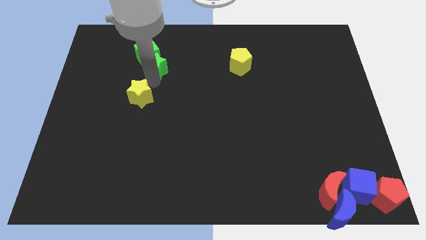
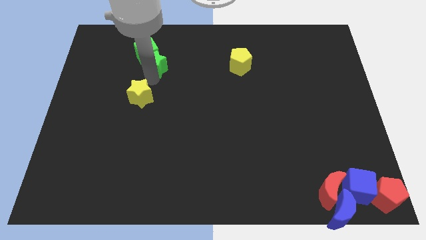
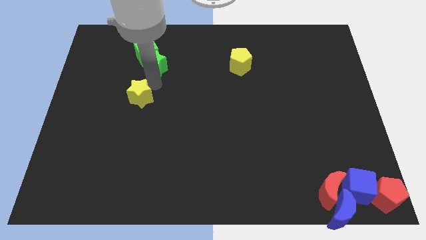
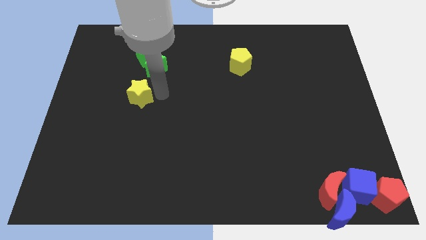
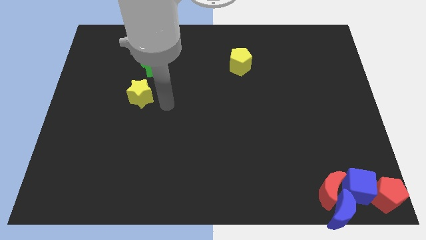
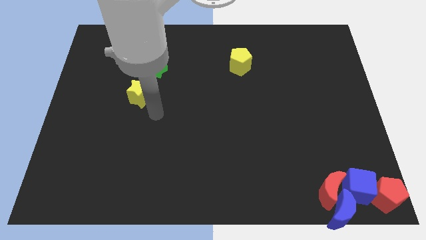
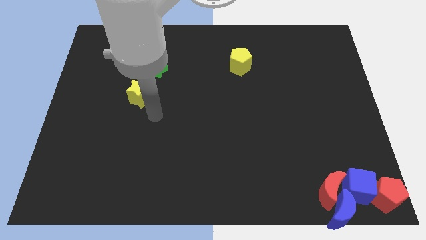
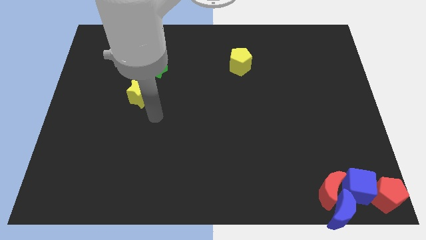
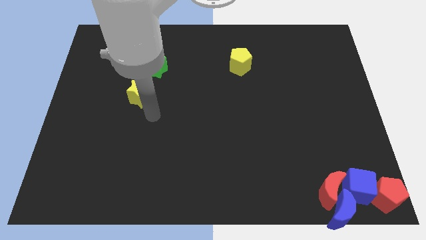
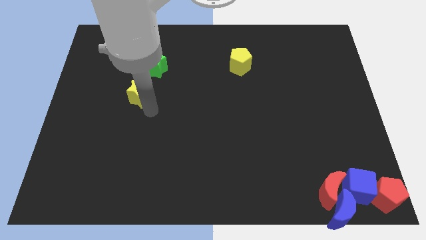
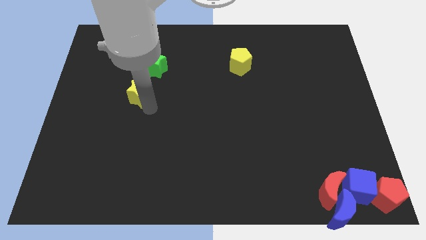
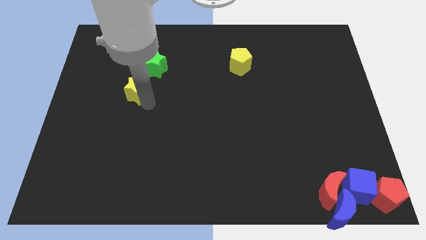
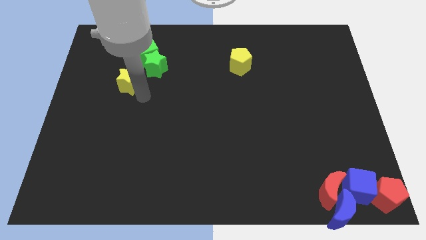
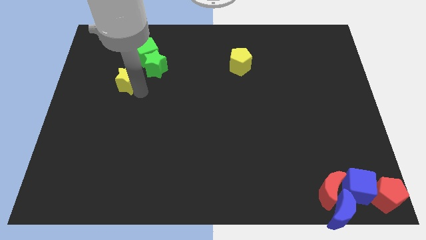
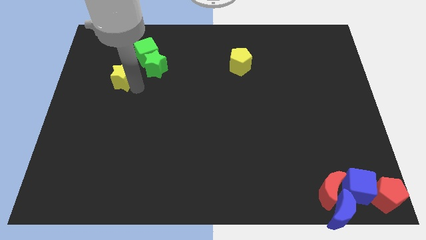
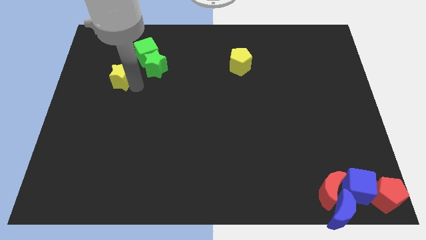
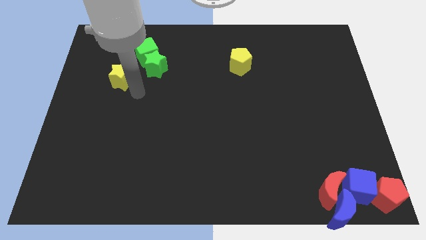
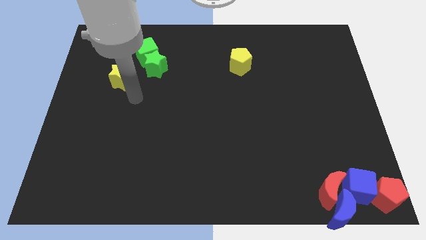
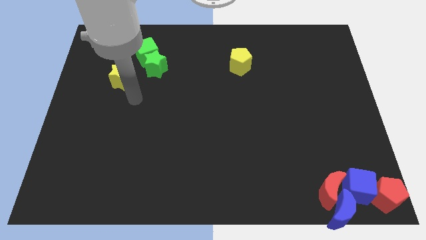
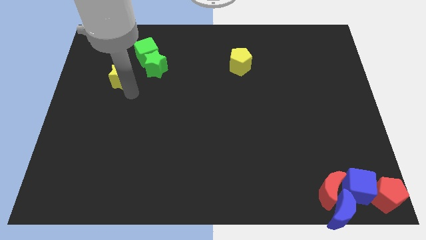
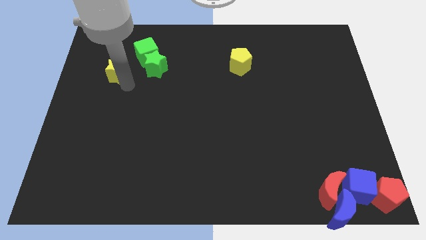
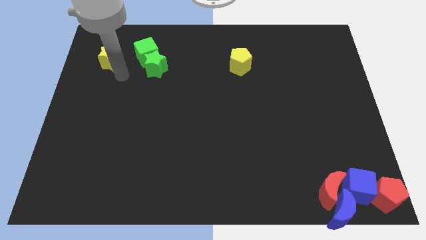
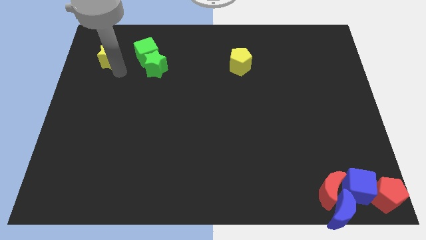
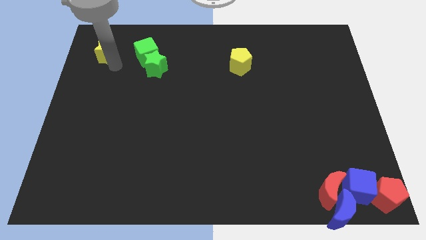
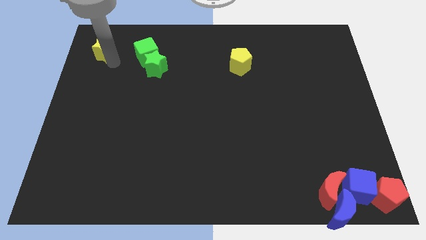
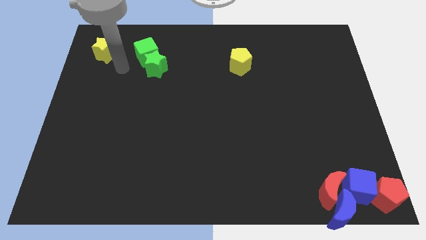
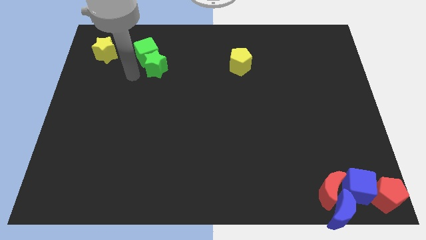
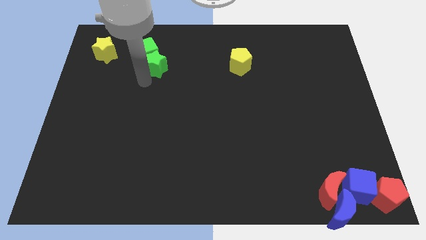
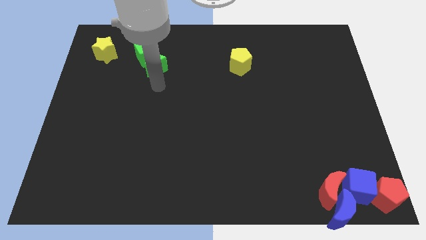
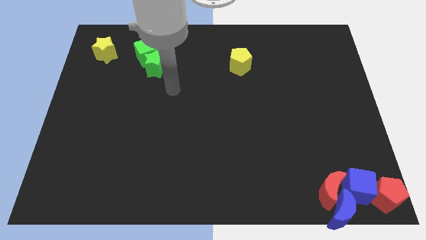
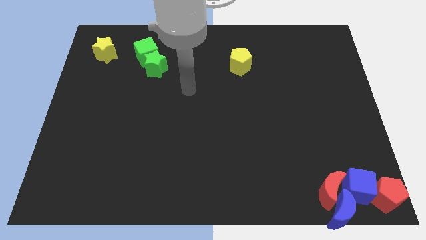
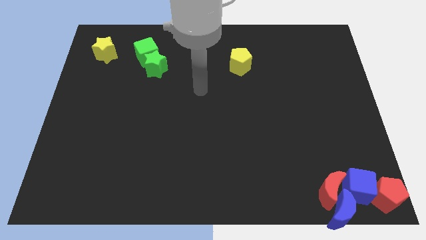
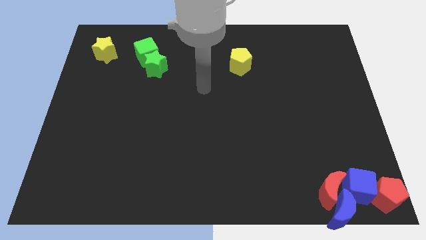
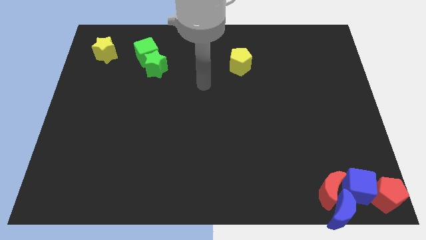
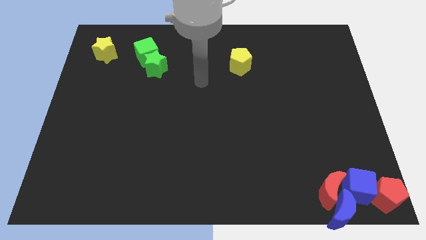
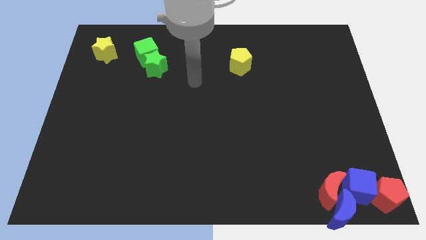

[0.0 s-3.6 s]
push the yellow star upward

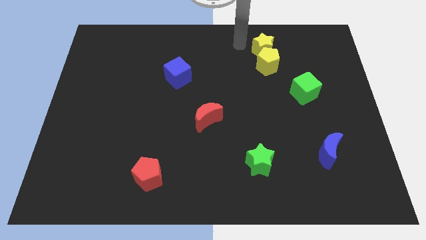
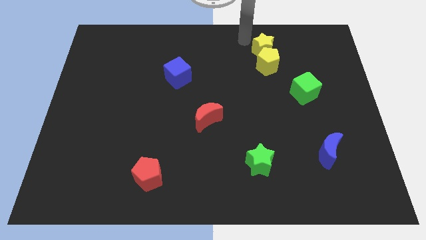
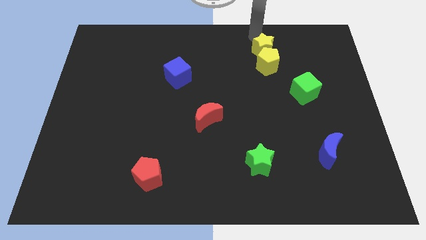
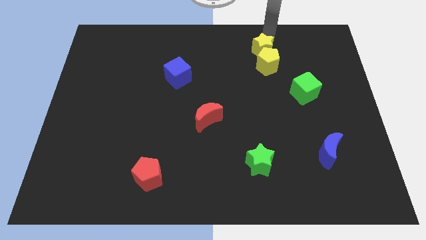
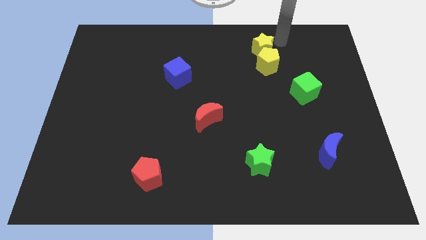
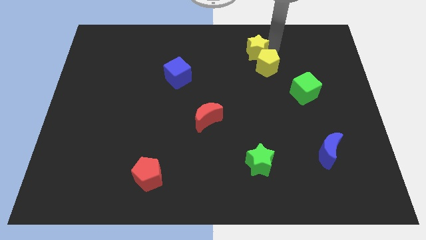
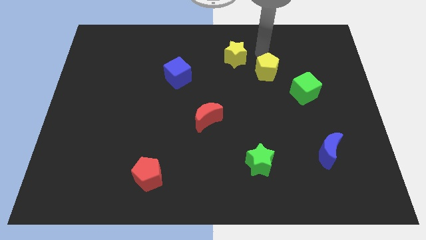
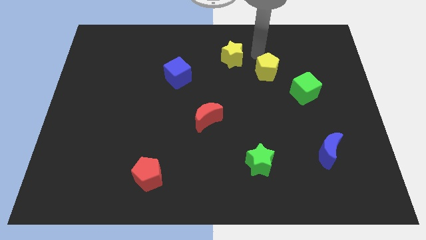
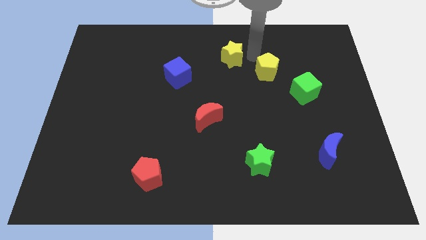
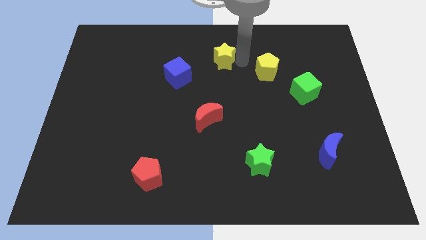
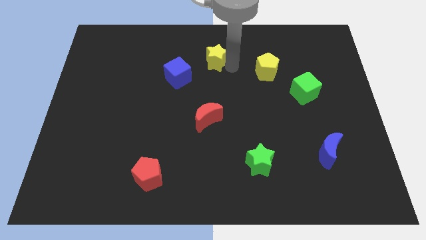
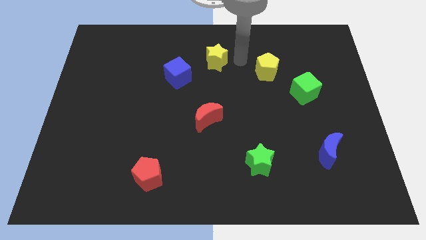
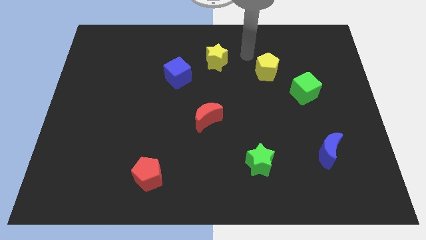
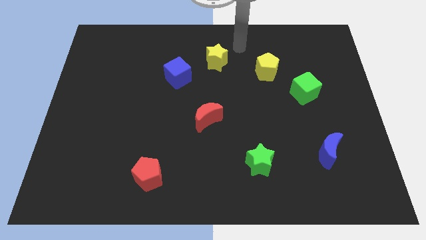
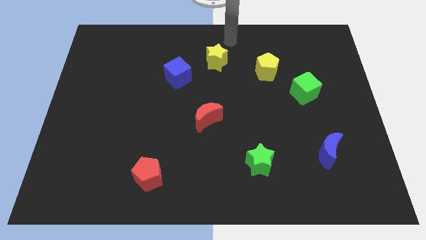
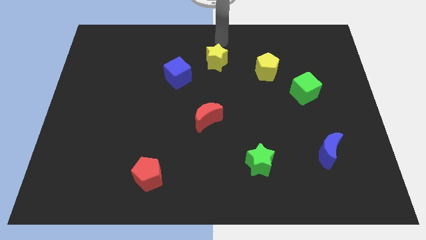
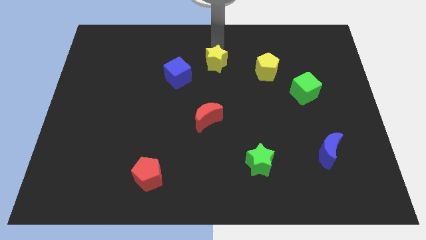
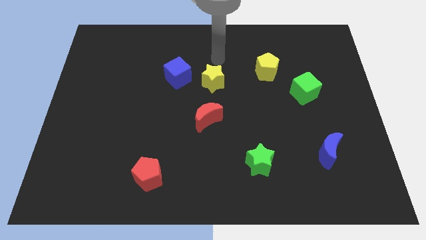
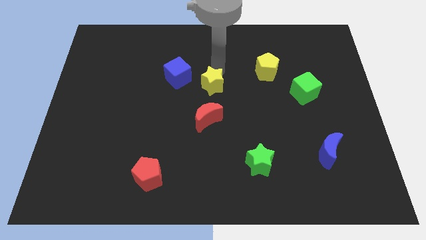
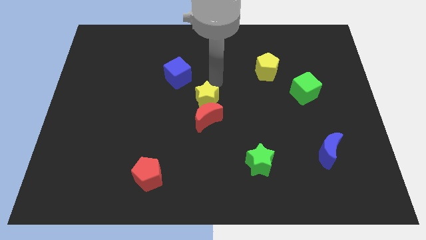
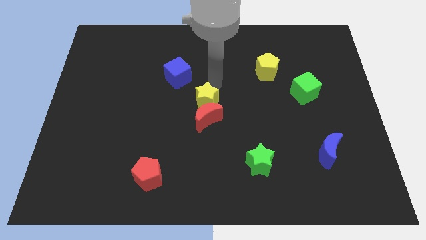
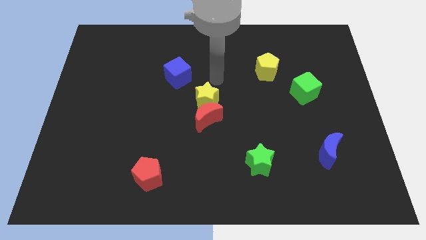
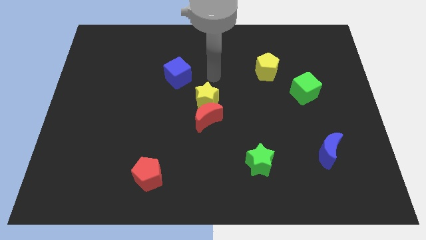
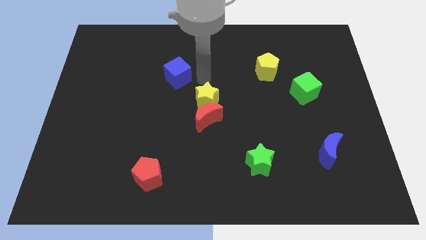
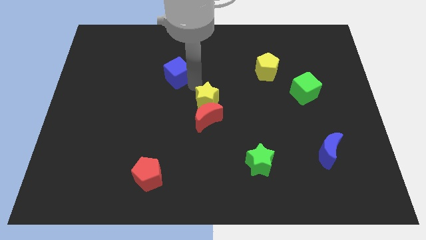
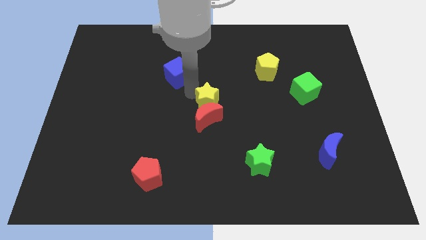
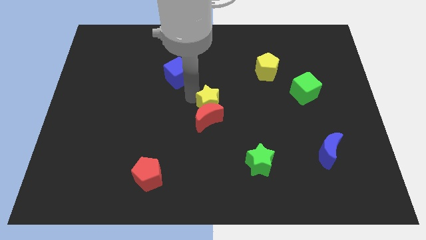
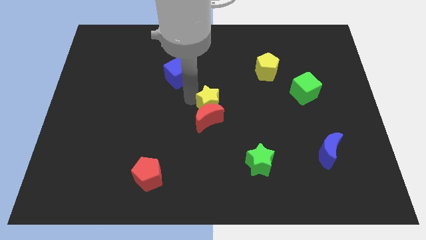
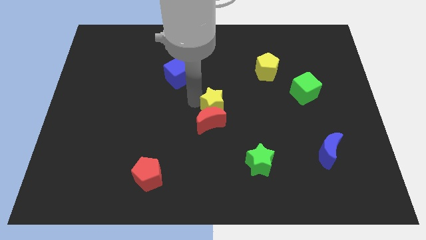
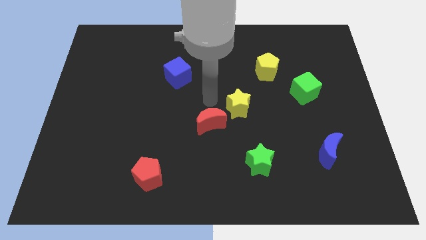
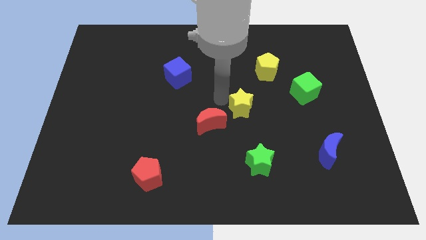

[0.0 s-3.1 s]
place yellow star diagonally towards green star

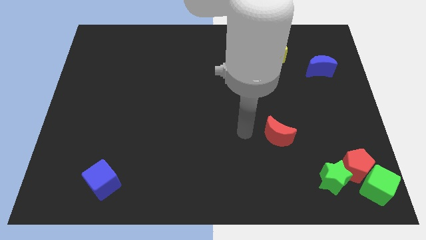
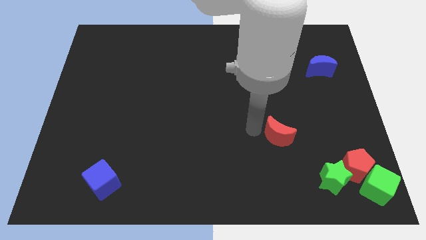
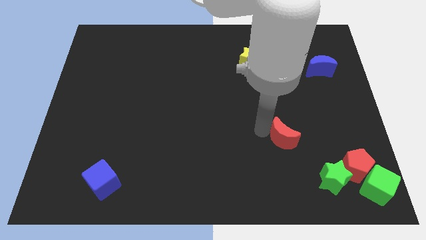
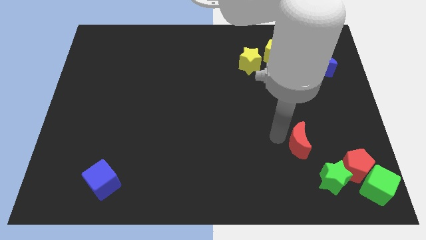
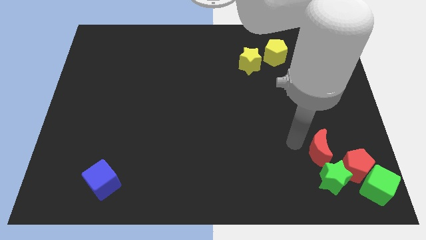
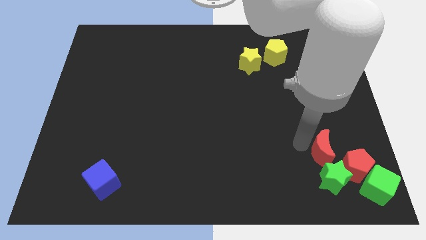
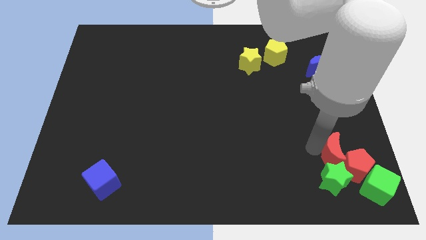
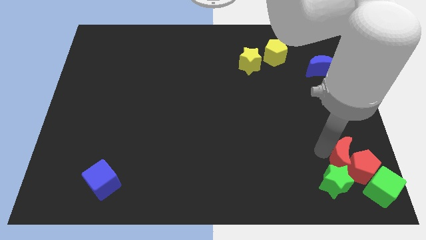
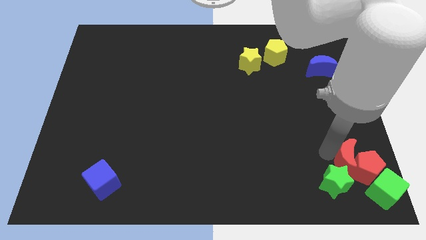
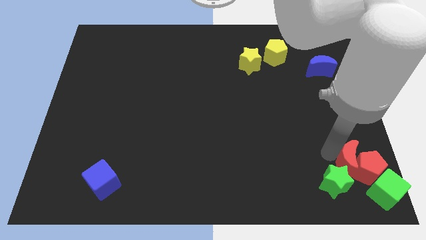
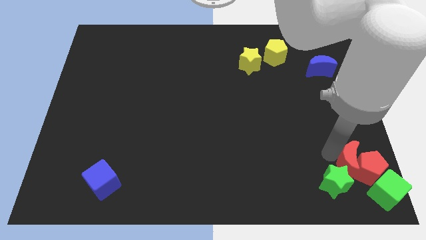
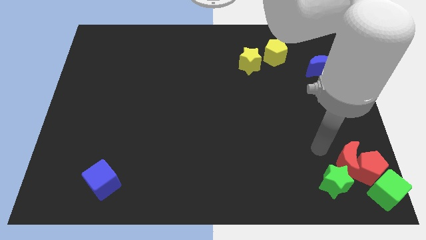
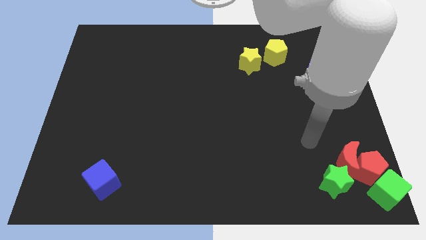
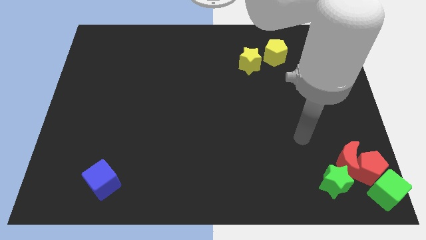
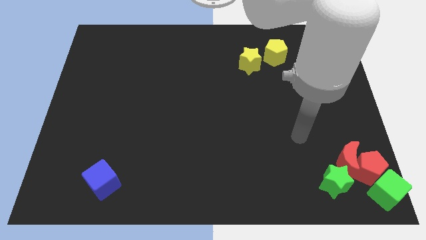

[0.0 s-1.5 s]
move the red crescent into the red pentagon

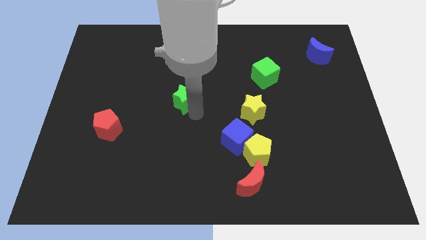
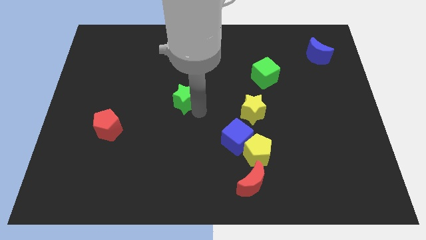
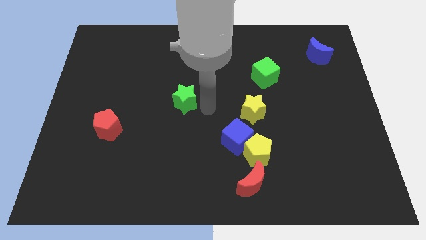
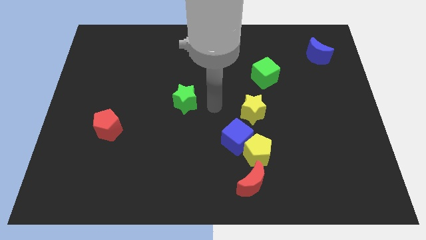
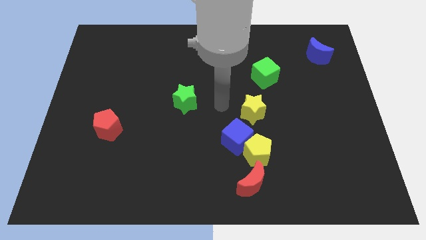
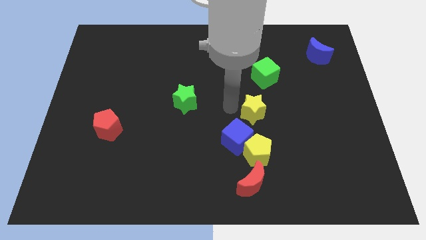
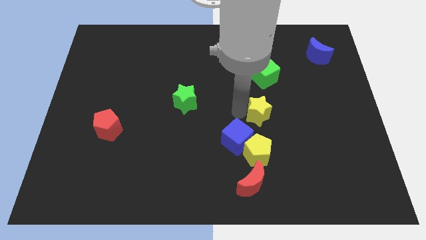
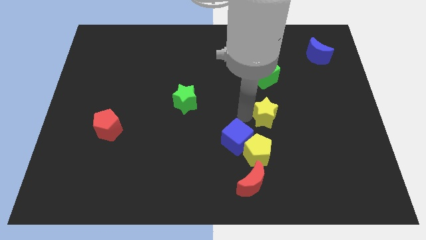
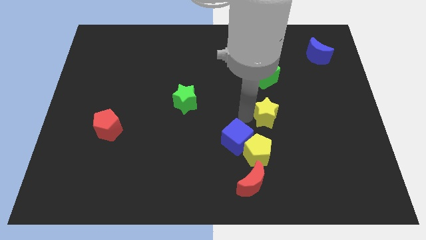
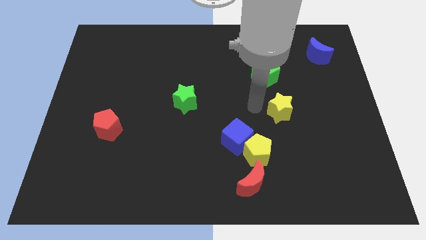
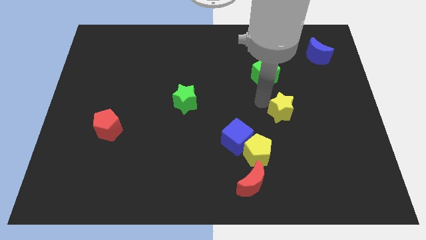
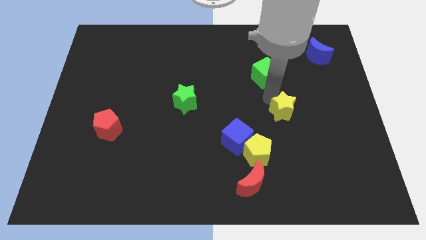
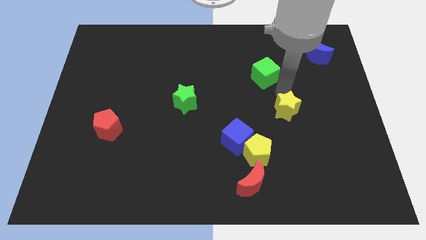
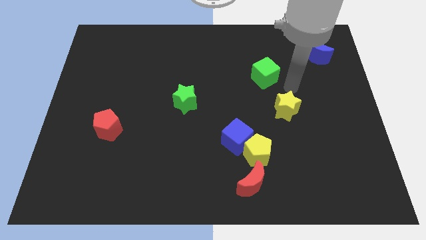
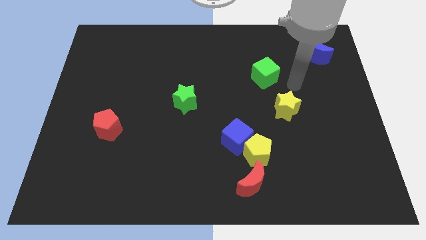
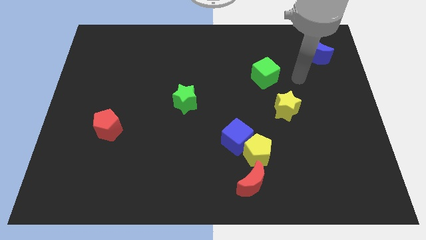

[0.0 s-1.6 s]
move yellow star towards right
